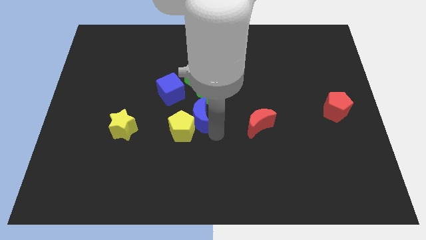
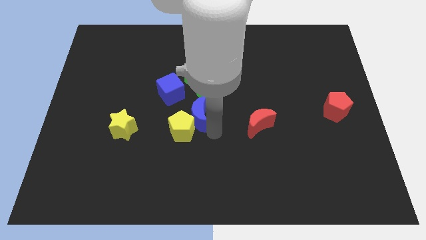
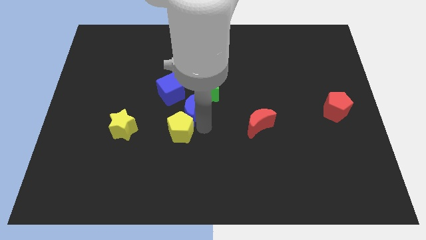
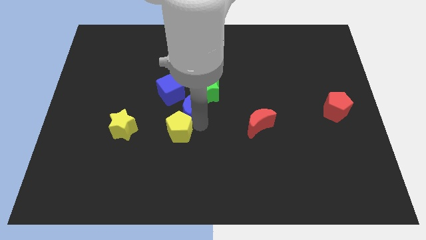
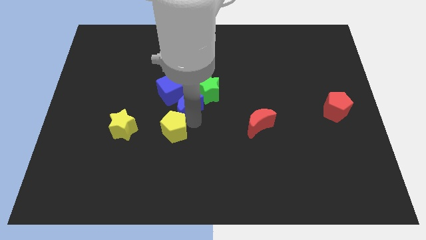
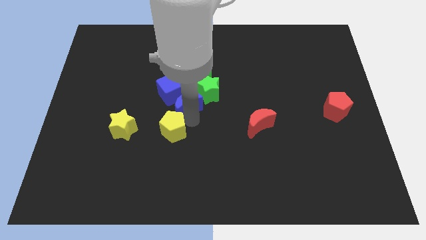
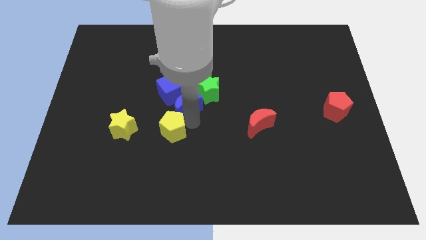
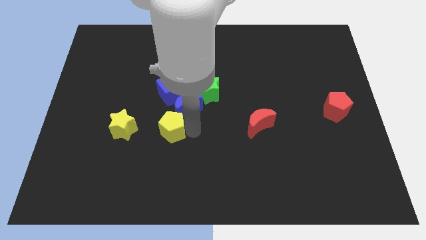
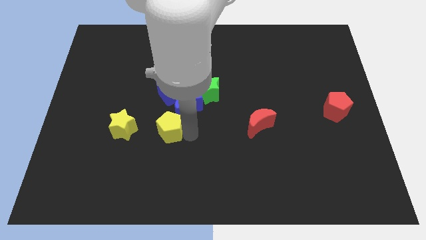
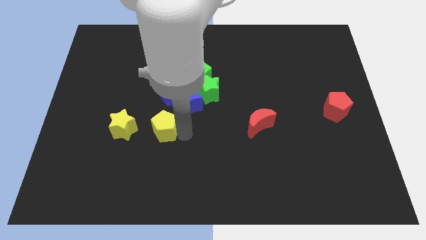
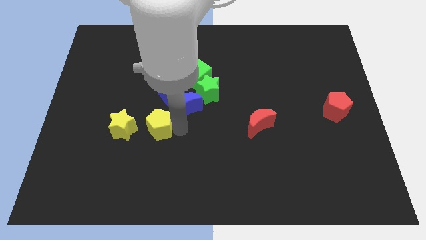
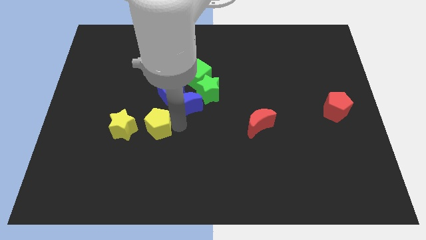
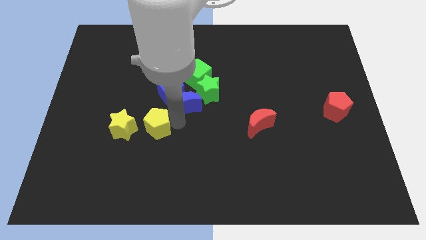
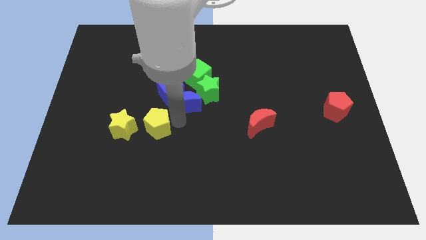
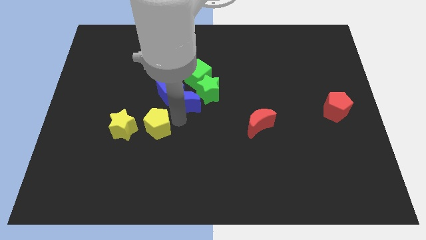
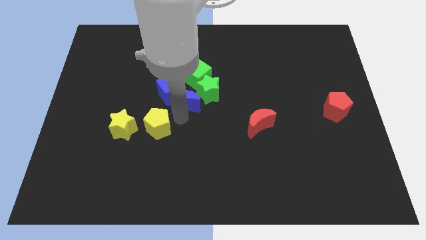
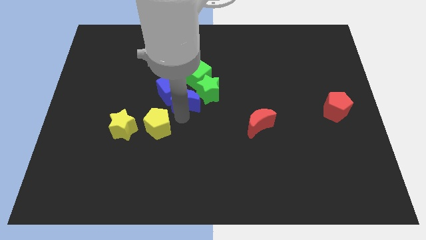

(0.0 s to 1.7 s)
move the blue crescent to the left of the green star

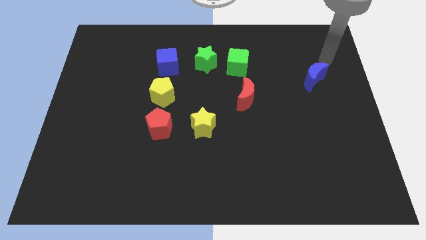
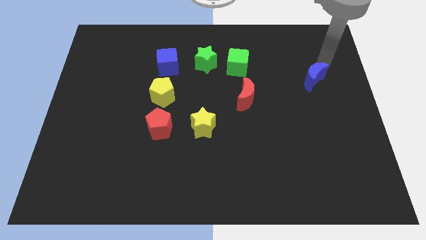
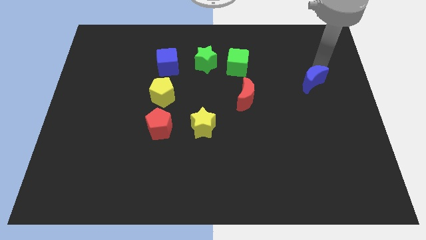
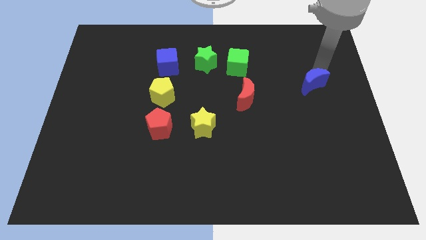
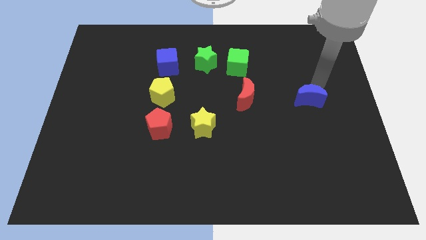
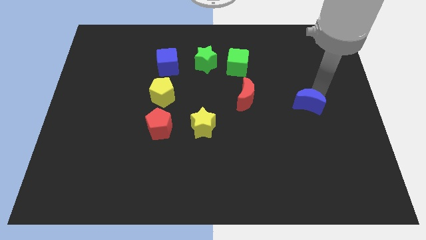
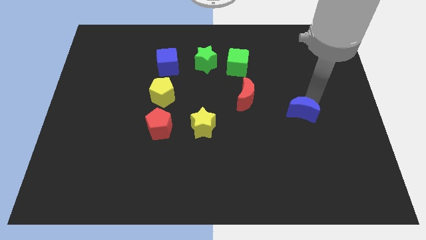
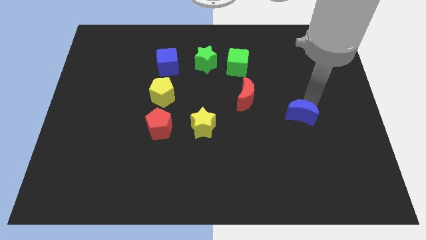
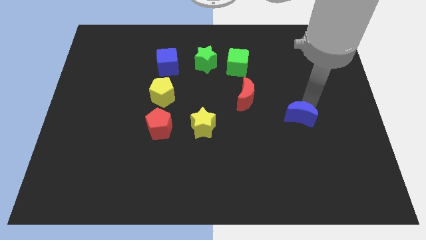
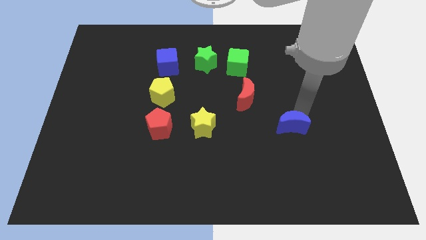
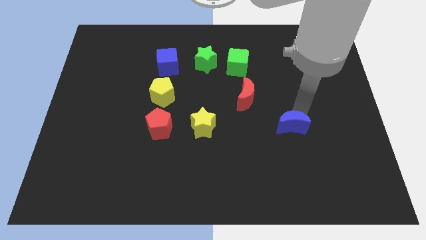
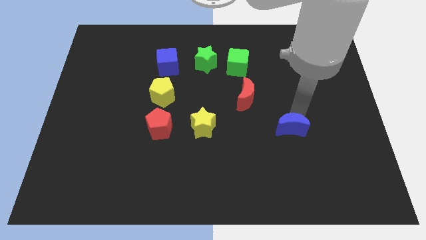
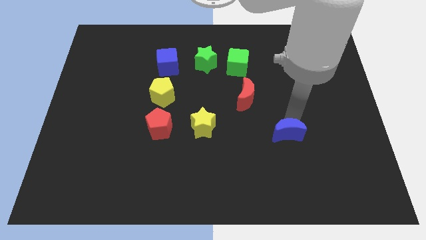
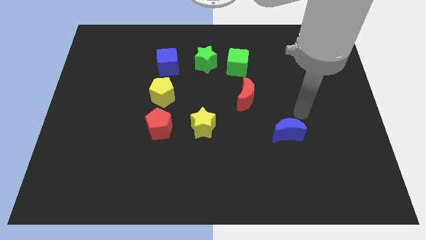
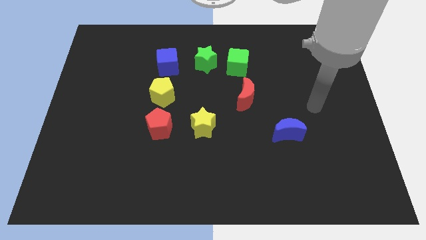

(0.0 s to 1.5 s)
push blue crescent to the right of yellow star

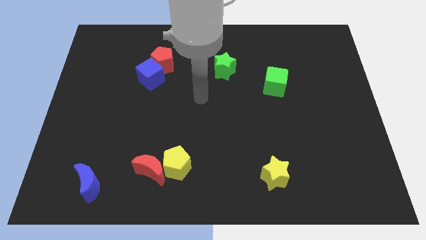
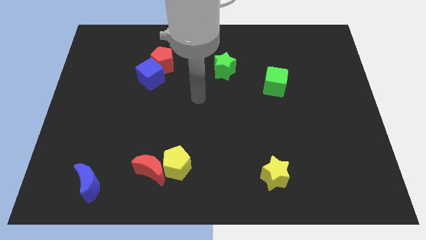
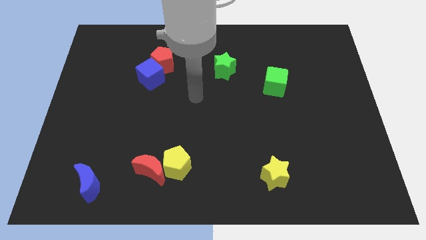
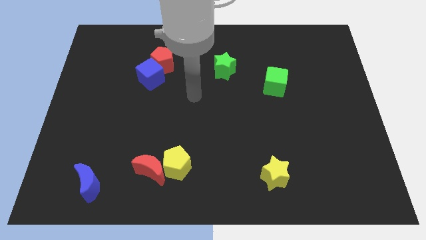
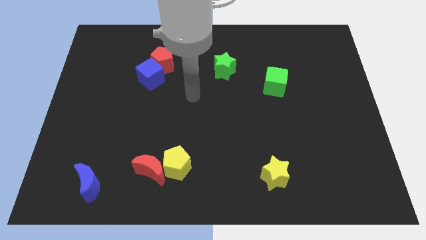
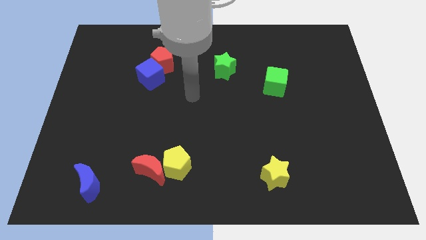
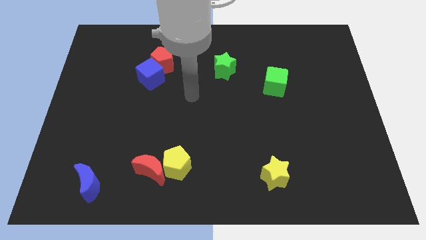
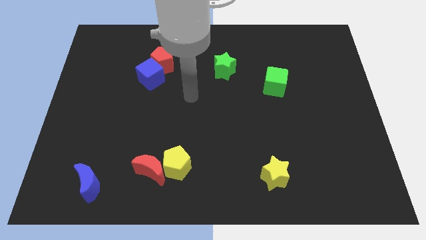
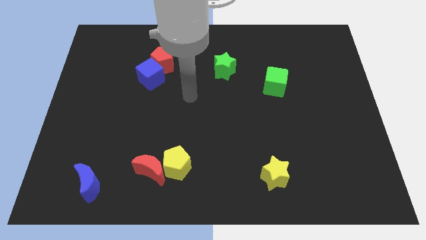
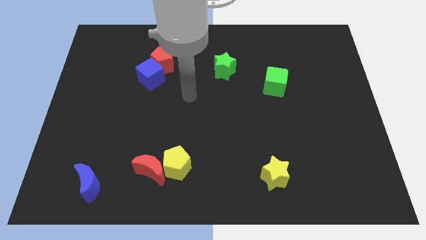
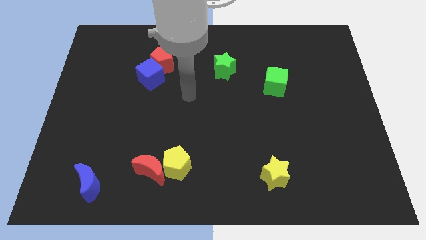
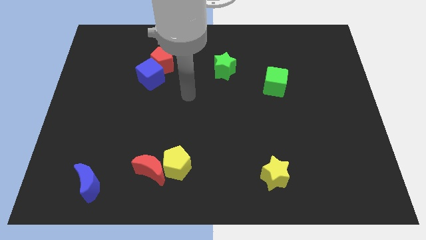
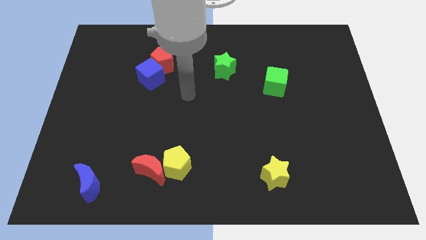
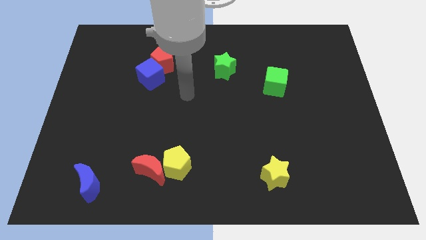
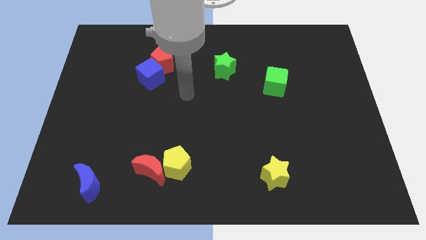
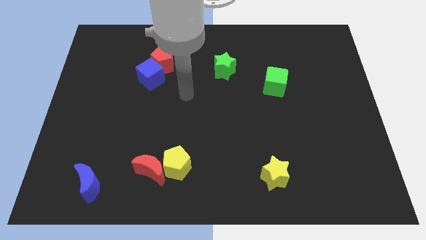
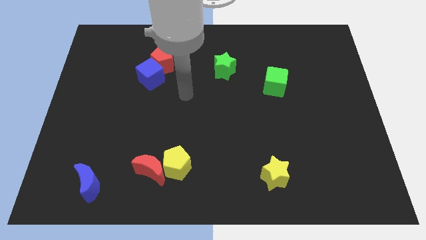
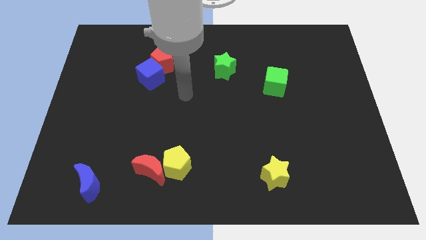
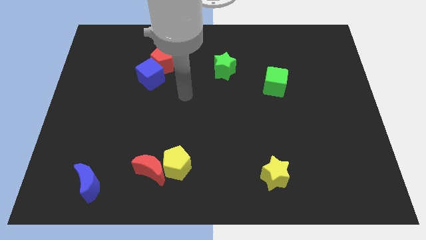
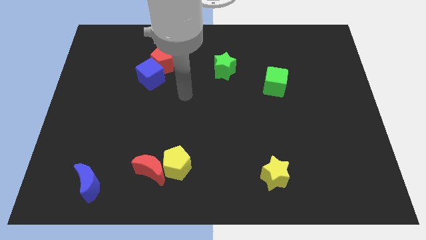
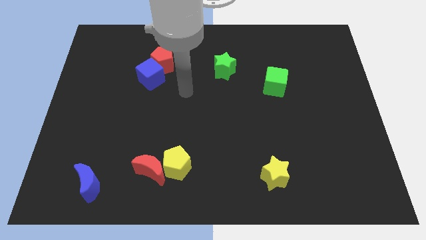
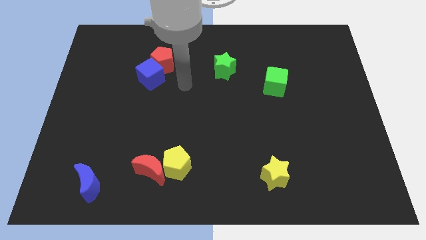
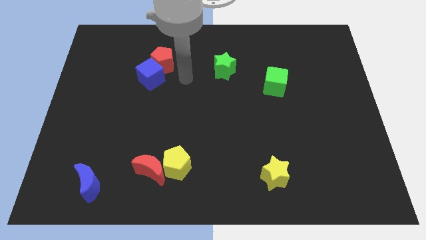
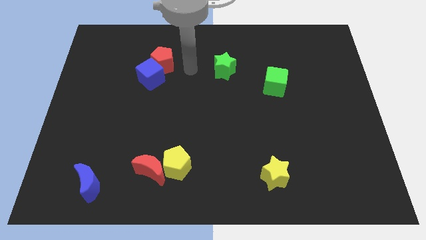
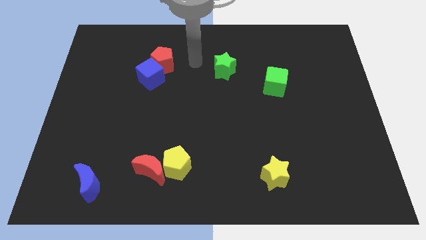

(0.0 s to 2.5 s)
point the arm in between the red pentagon and the green star

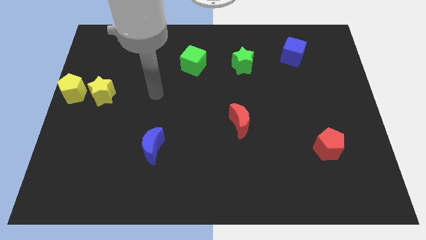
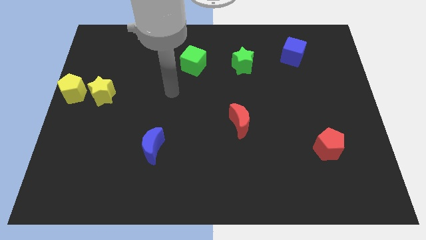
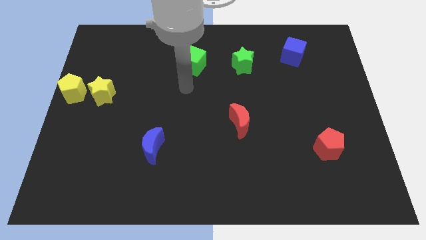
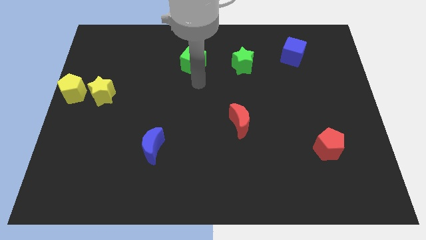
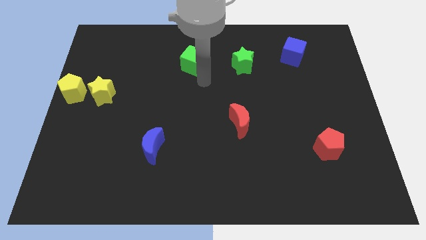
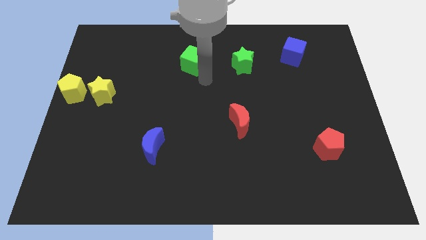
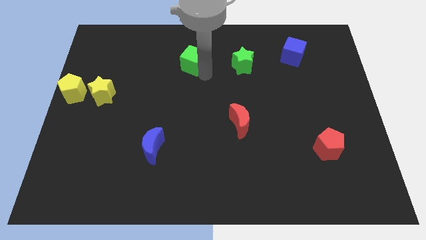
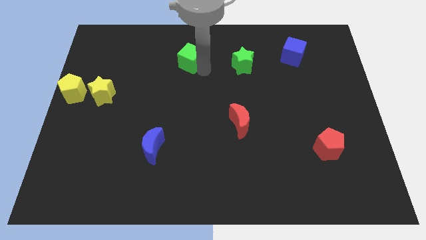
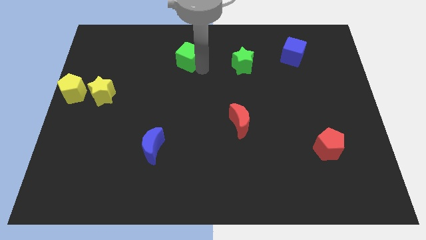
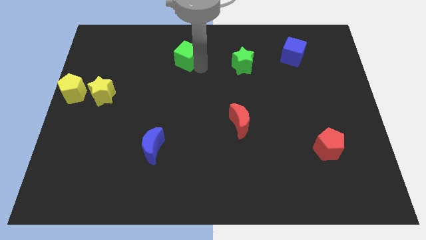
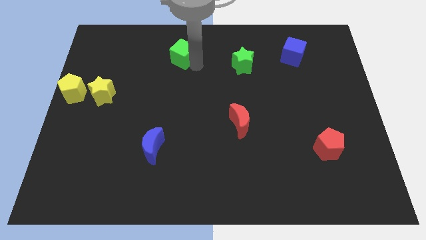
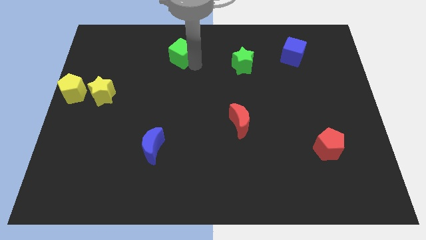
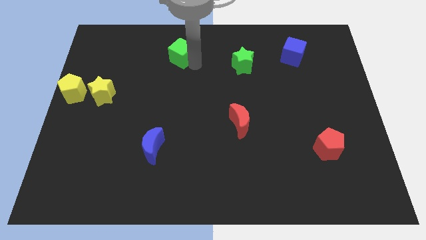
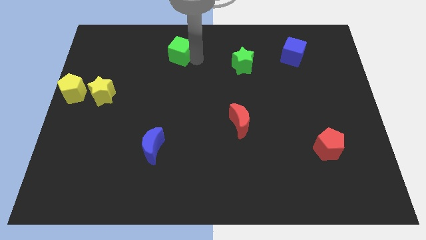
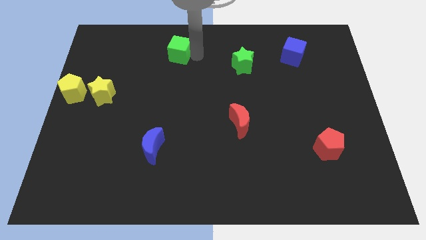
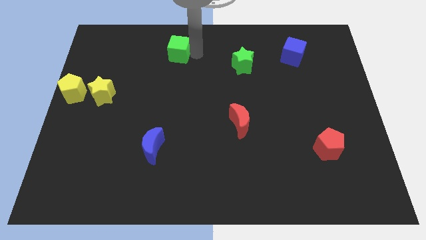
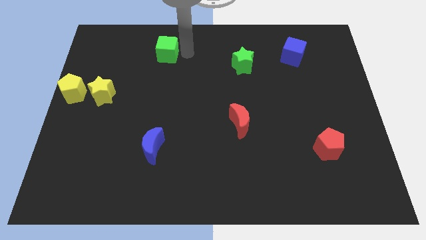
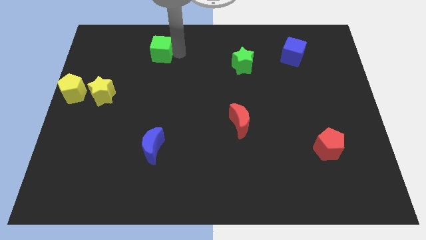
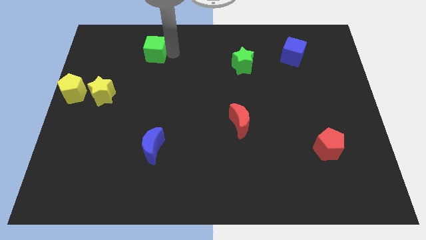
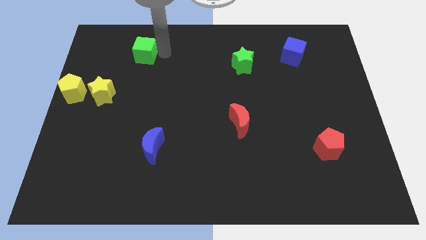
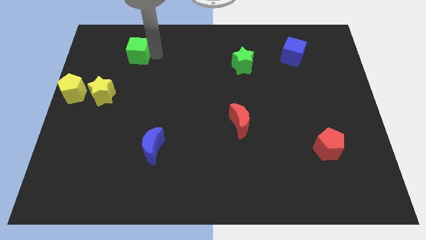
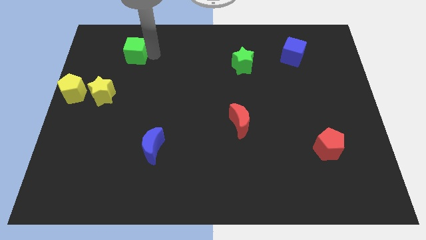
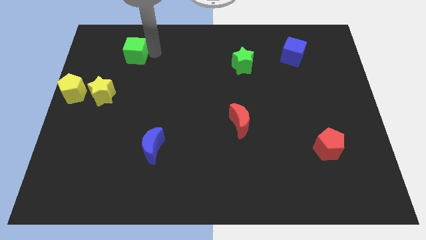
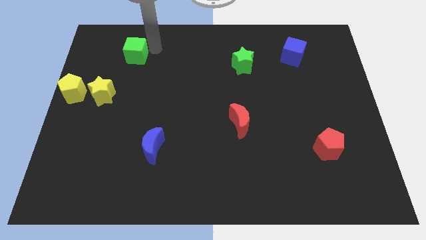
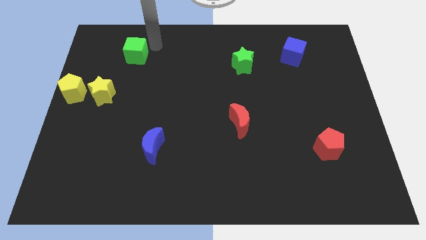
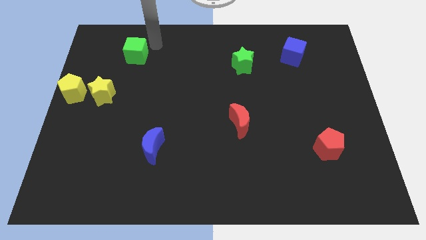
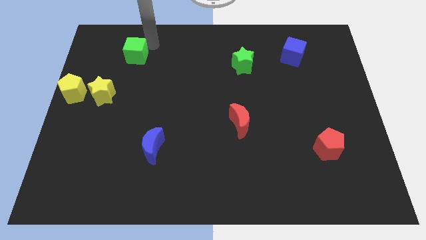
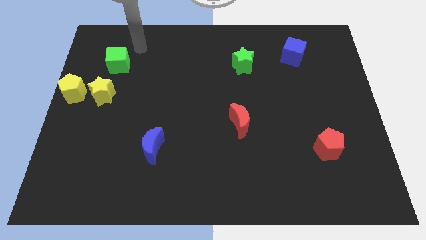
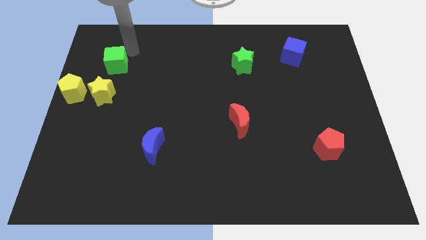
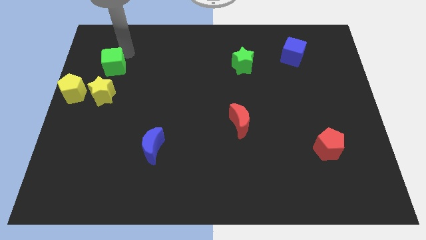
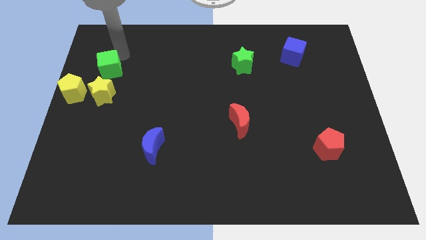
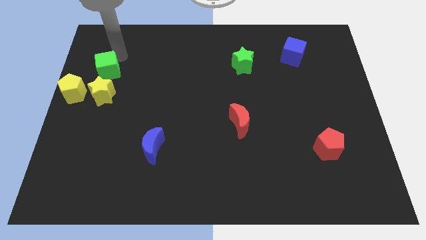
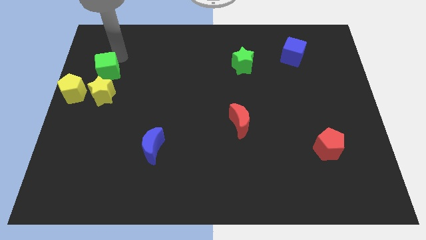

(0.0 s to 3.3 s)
move the green cube above the yellow star
